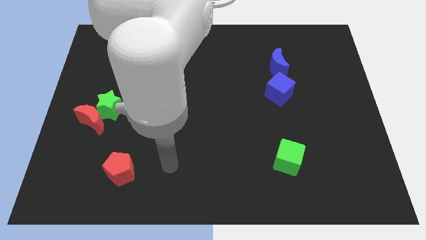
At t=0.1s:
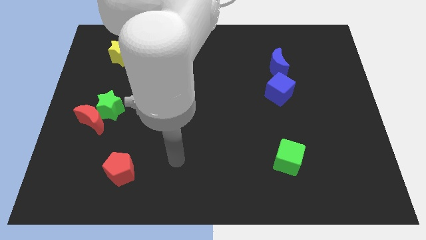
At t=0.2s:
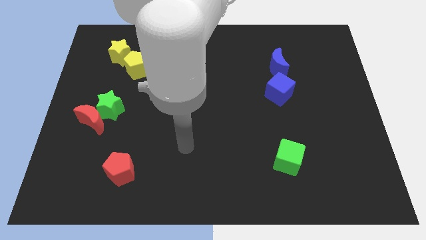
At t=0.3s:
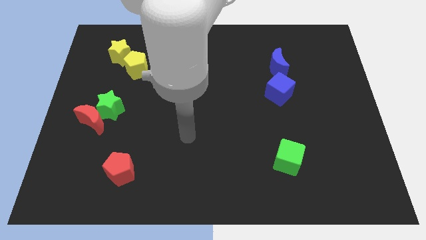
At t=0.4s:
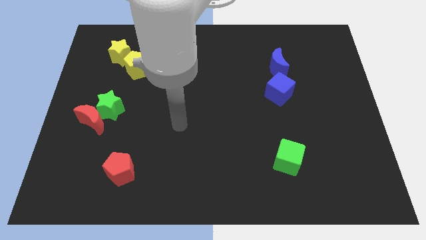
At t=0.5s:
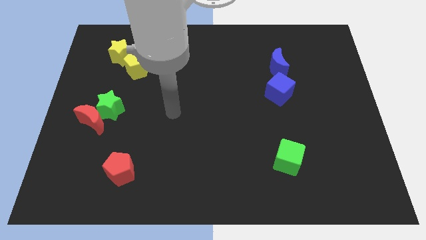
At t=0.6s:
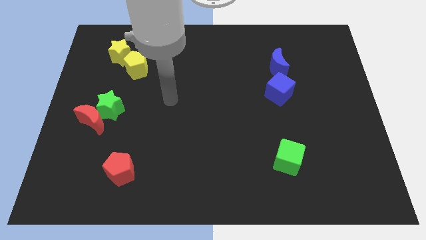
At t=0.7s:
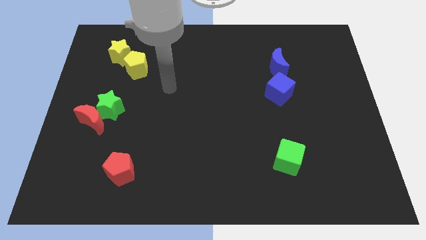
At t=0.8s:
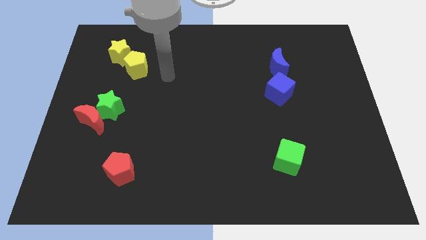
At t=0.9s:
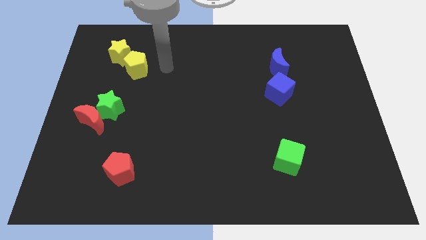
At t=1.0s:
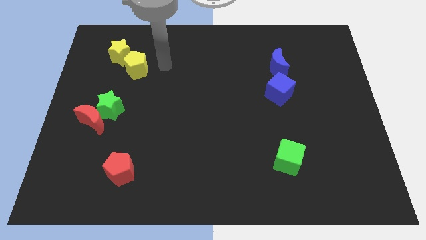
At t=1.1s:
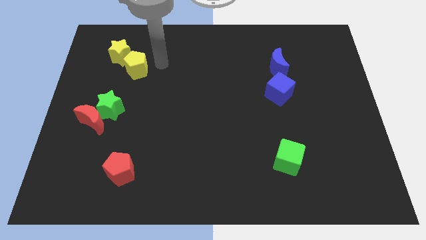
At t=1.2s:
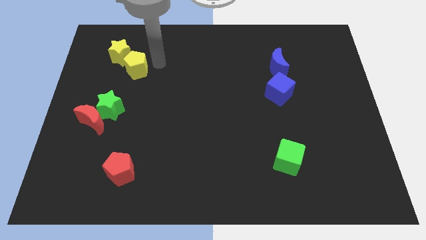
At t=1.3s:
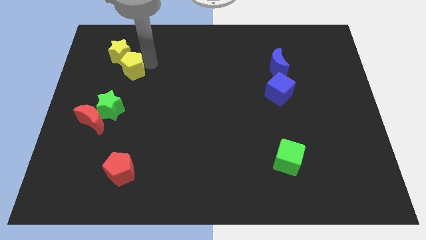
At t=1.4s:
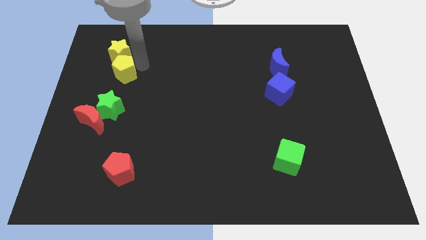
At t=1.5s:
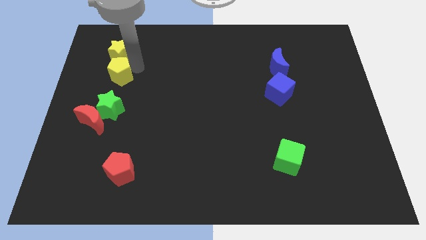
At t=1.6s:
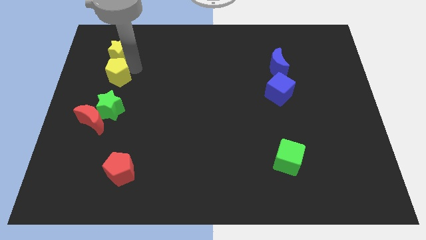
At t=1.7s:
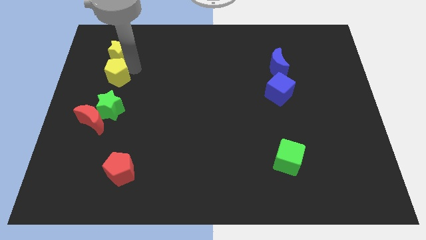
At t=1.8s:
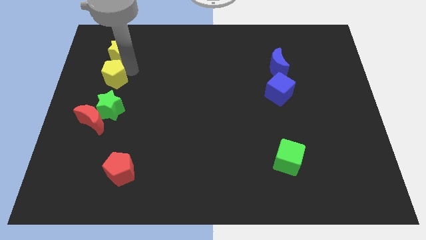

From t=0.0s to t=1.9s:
put the yellow pentagon in between the yellow star and green star

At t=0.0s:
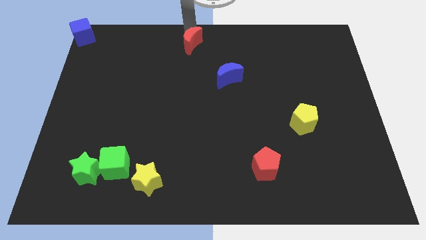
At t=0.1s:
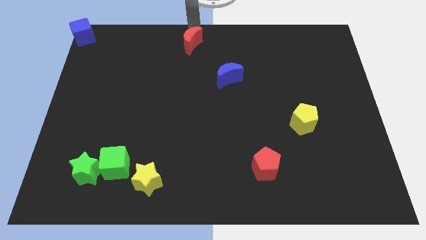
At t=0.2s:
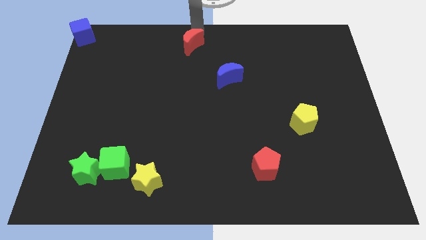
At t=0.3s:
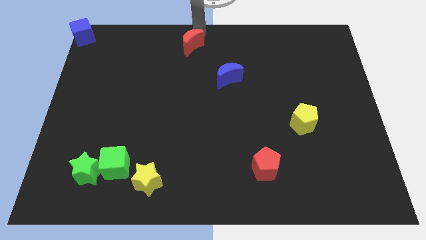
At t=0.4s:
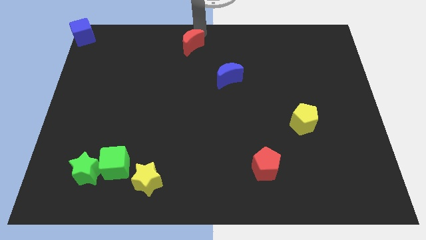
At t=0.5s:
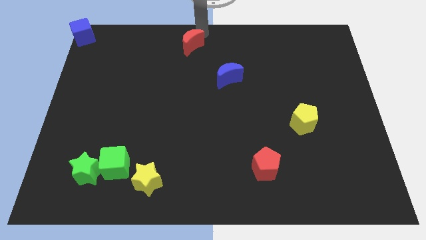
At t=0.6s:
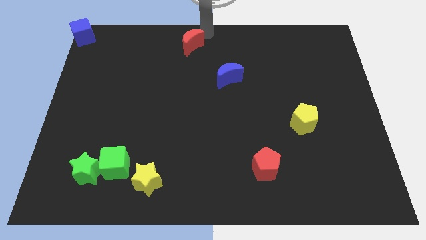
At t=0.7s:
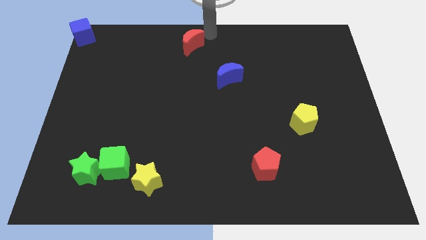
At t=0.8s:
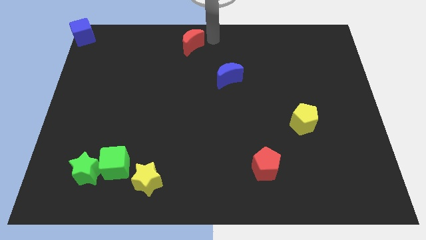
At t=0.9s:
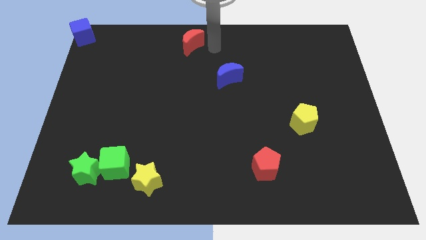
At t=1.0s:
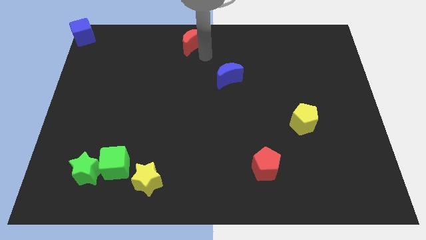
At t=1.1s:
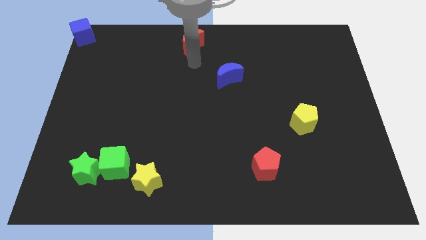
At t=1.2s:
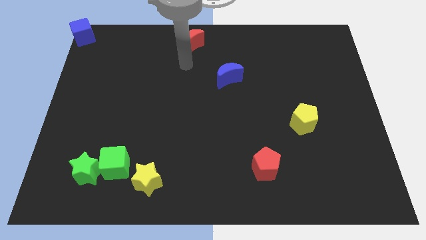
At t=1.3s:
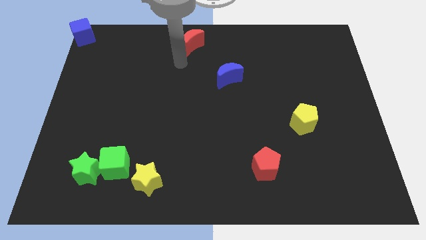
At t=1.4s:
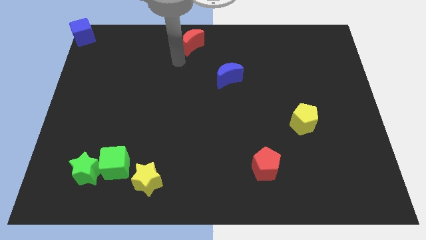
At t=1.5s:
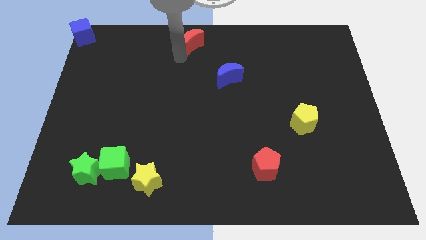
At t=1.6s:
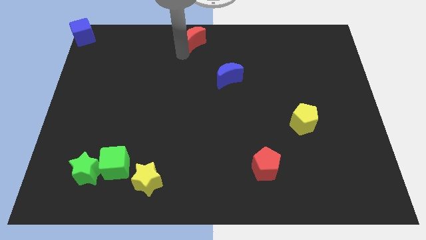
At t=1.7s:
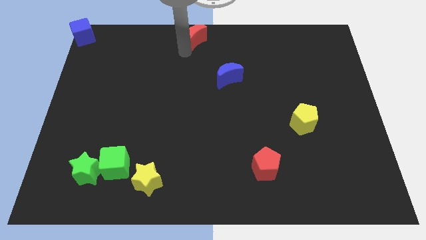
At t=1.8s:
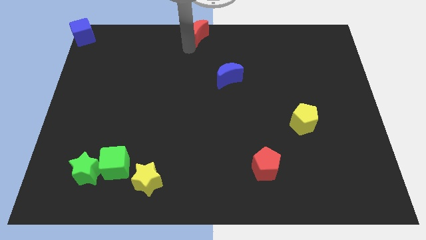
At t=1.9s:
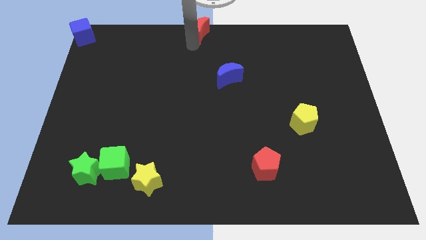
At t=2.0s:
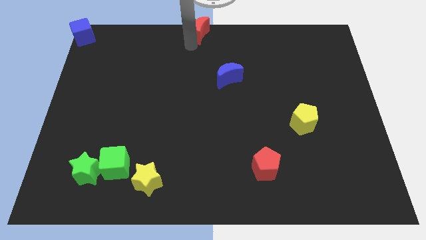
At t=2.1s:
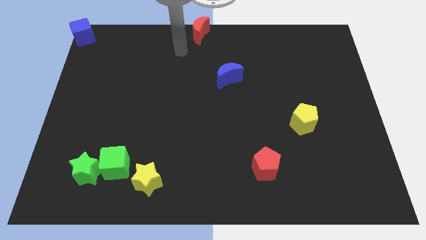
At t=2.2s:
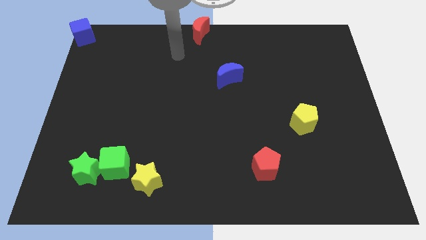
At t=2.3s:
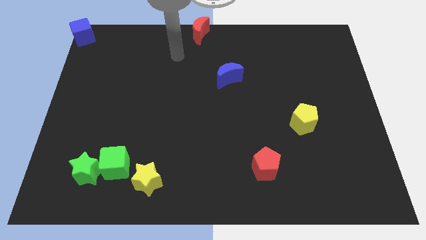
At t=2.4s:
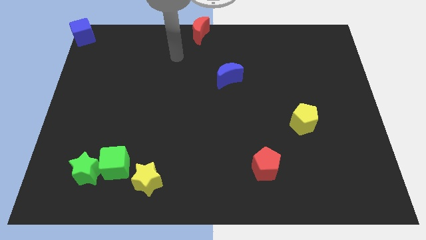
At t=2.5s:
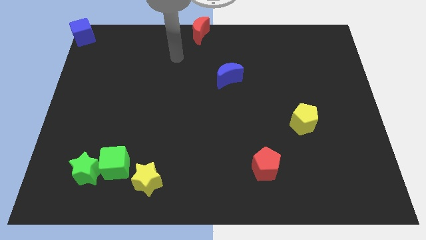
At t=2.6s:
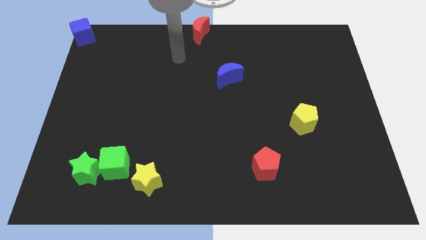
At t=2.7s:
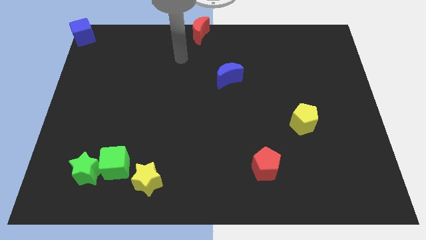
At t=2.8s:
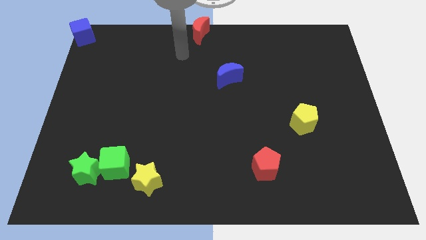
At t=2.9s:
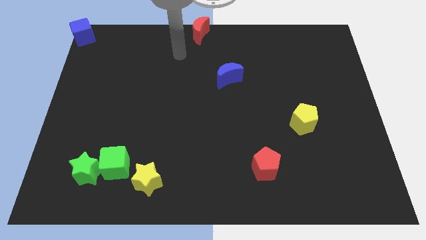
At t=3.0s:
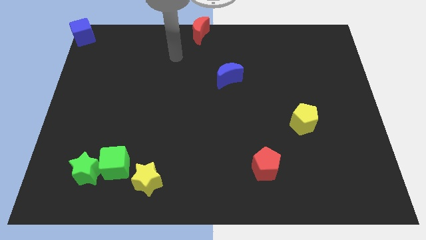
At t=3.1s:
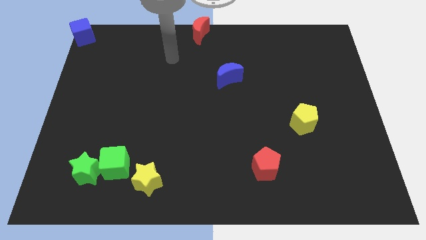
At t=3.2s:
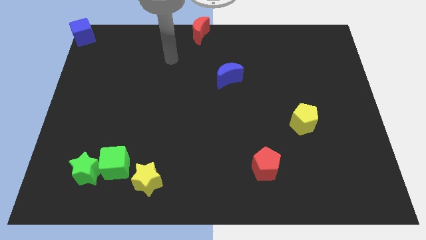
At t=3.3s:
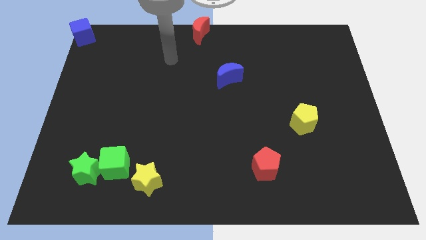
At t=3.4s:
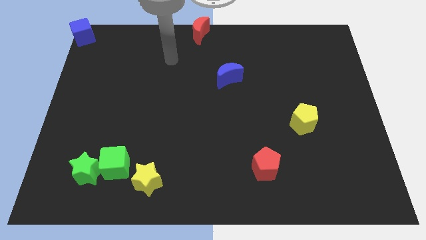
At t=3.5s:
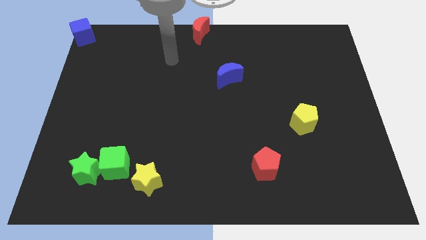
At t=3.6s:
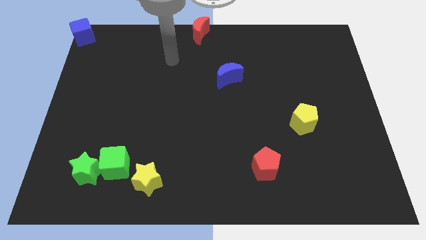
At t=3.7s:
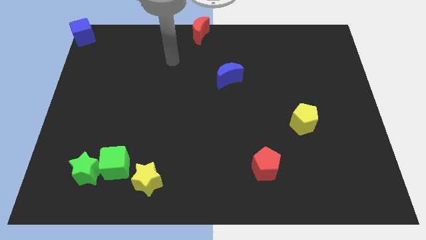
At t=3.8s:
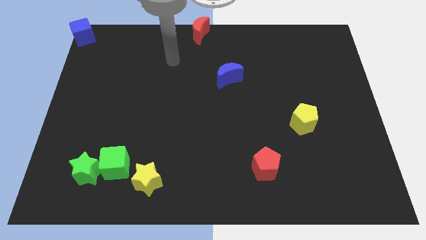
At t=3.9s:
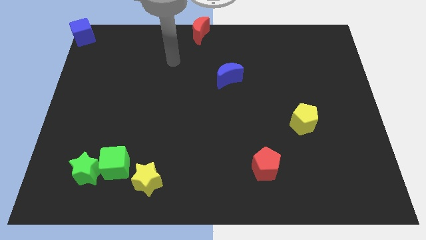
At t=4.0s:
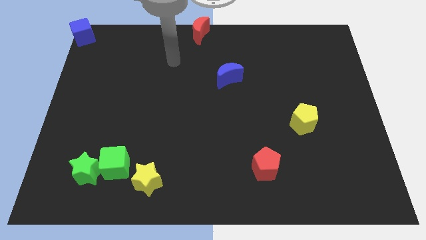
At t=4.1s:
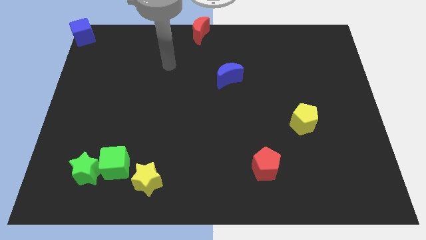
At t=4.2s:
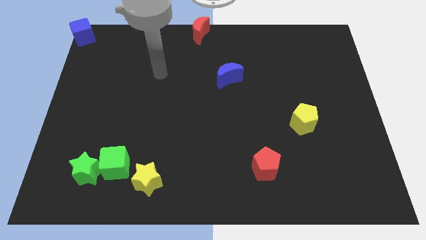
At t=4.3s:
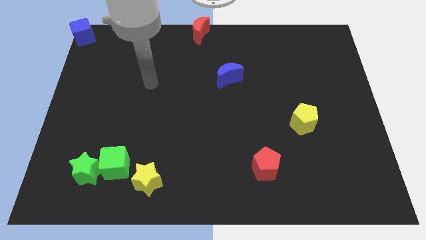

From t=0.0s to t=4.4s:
place your arm parallel to blue cube

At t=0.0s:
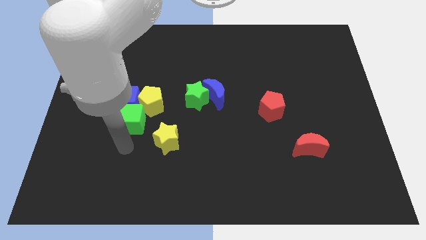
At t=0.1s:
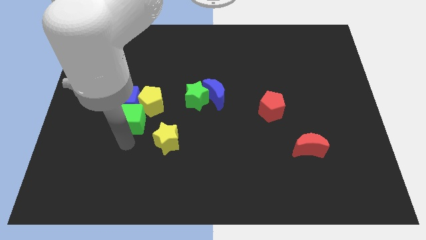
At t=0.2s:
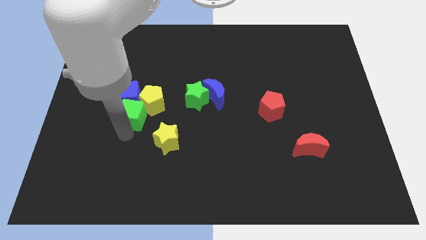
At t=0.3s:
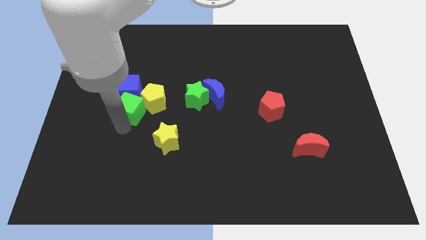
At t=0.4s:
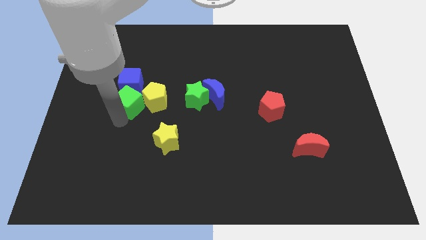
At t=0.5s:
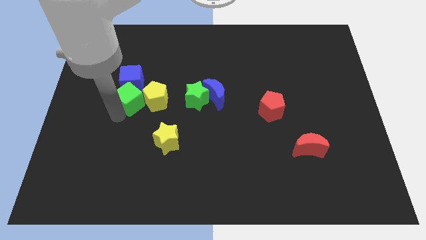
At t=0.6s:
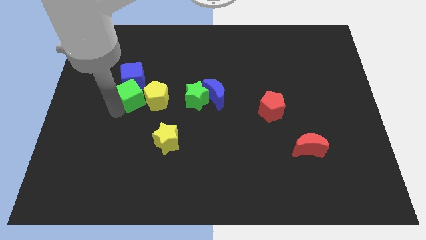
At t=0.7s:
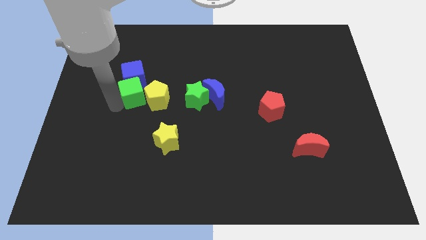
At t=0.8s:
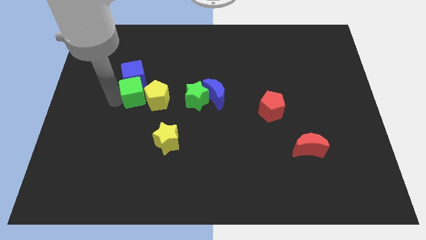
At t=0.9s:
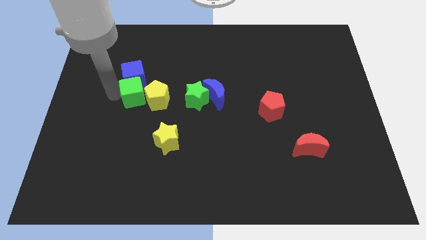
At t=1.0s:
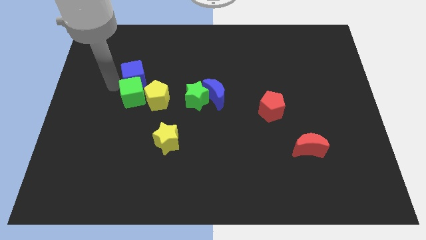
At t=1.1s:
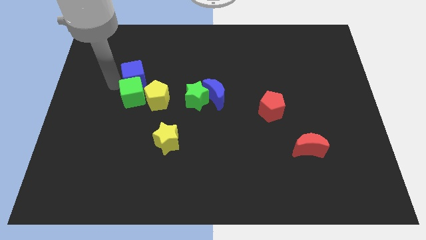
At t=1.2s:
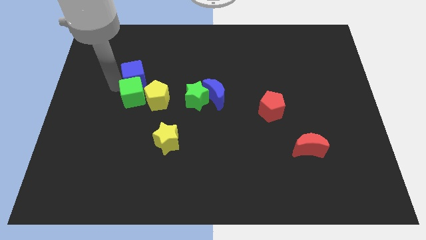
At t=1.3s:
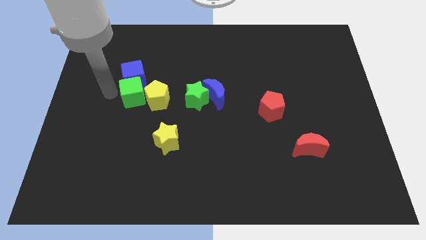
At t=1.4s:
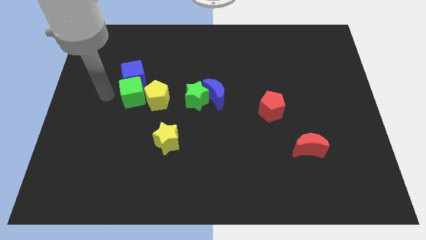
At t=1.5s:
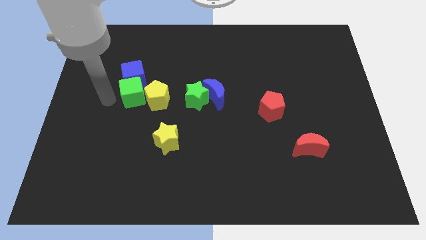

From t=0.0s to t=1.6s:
move the green cube below the blue cube

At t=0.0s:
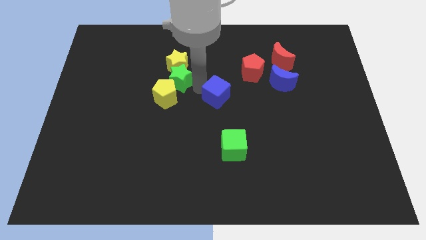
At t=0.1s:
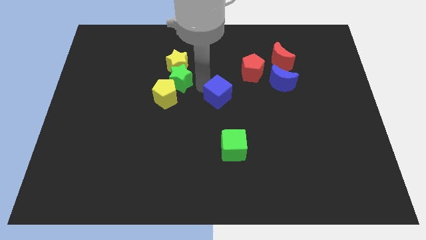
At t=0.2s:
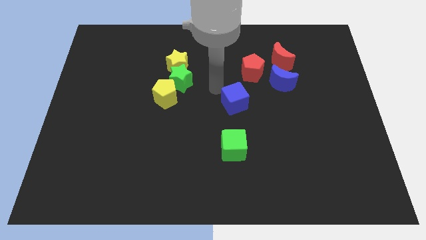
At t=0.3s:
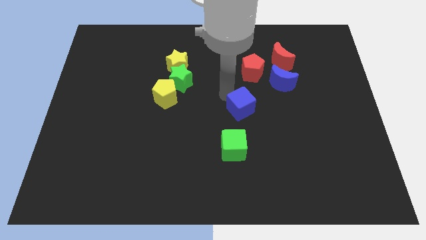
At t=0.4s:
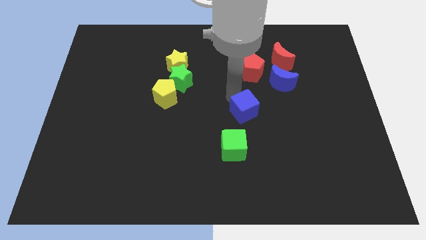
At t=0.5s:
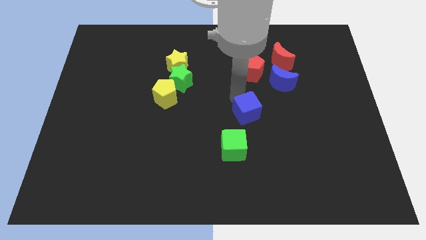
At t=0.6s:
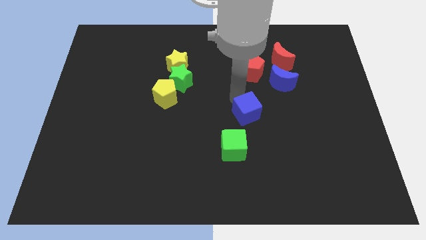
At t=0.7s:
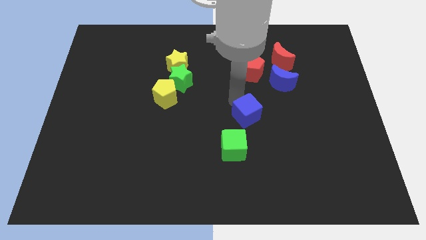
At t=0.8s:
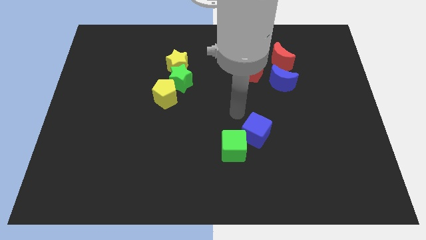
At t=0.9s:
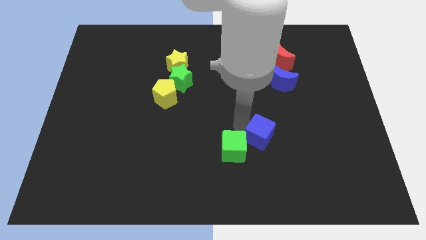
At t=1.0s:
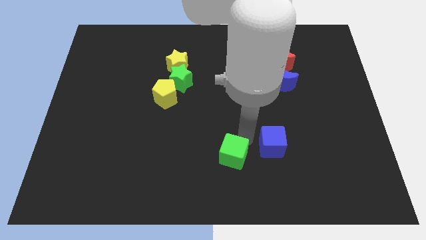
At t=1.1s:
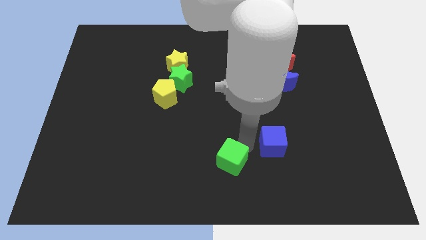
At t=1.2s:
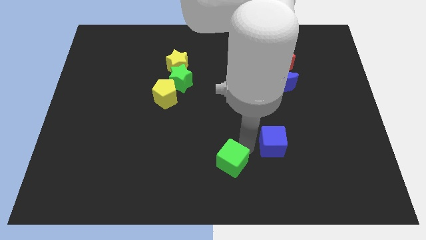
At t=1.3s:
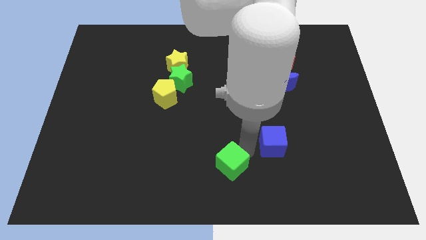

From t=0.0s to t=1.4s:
push the blue cube into green cube
